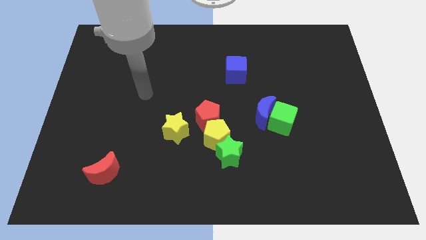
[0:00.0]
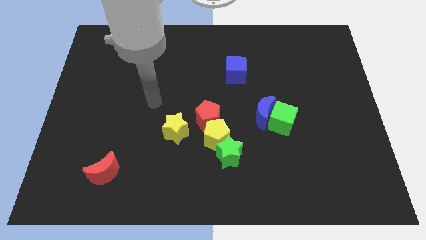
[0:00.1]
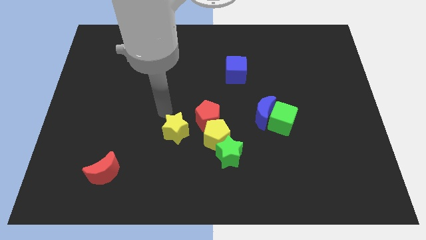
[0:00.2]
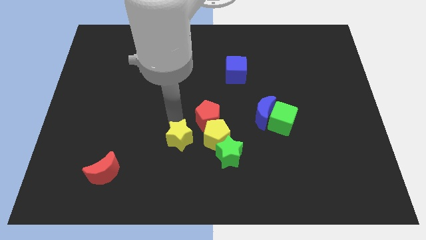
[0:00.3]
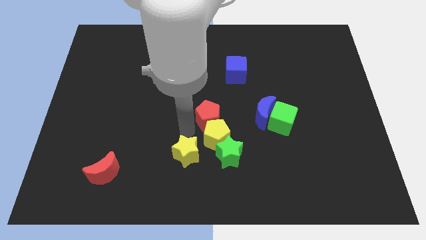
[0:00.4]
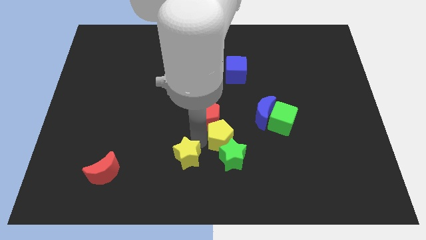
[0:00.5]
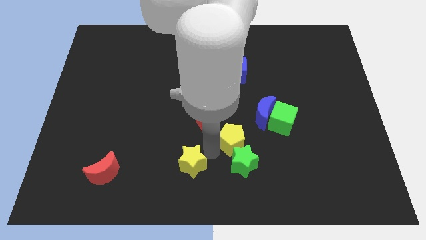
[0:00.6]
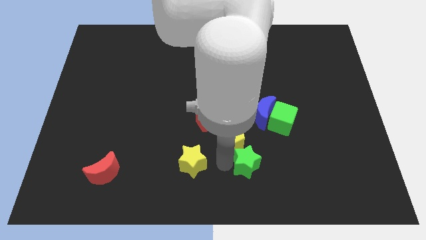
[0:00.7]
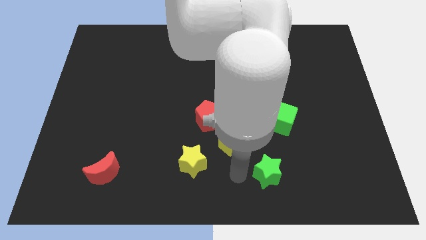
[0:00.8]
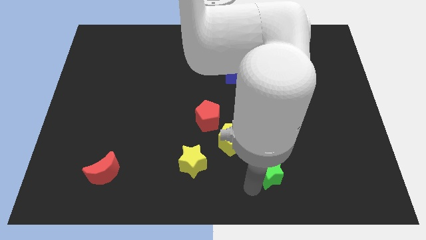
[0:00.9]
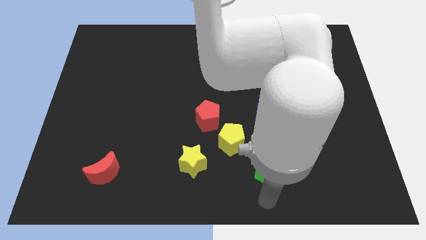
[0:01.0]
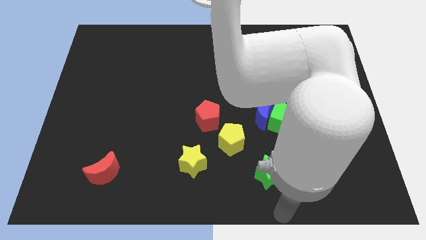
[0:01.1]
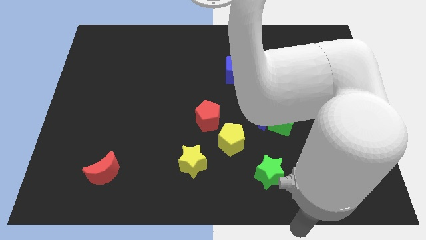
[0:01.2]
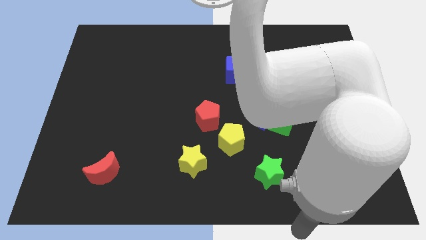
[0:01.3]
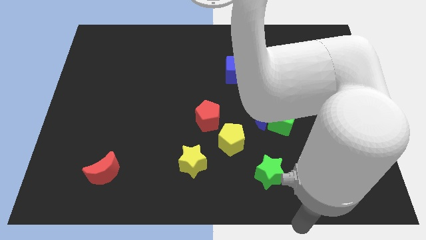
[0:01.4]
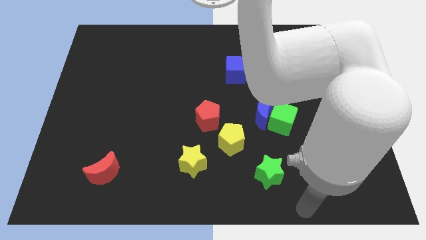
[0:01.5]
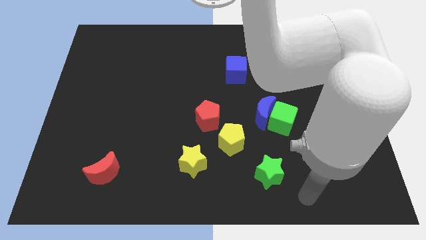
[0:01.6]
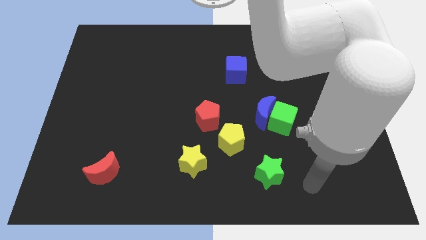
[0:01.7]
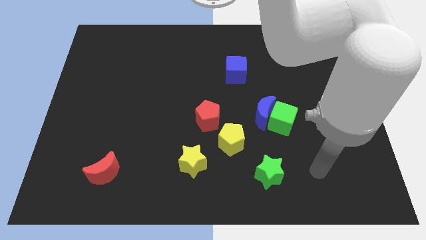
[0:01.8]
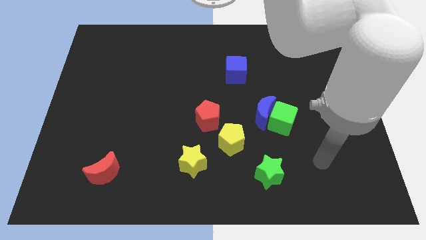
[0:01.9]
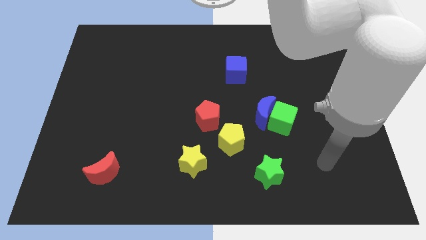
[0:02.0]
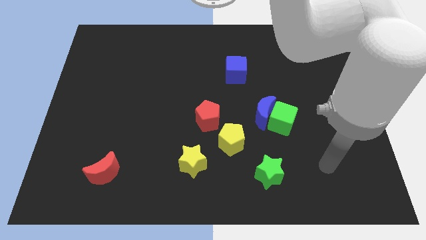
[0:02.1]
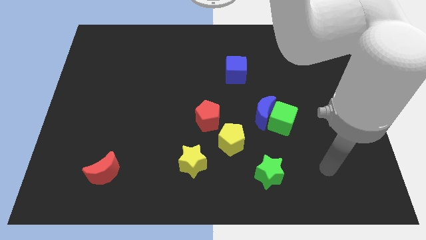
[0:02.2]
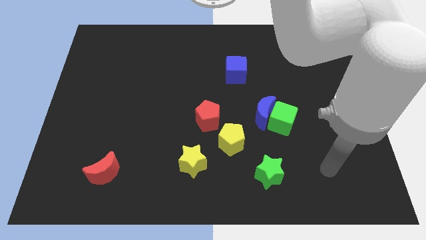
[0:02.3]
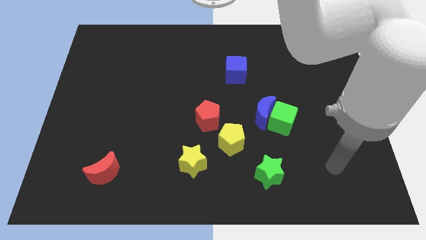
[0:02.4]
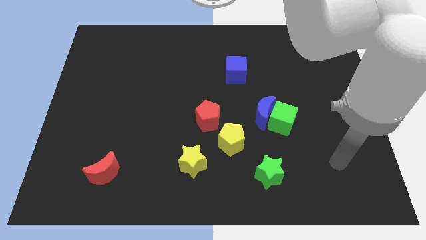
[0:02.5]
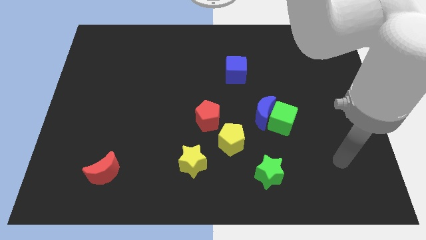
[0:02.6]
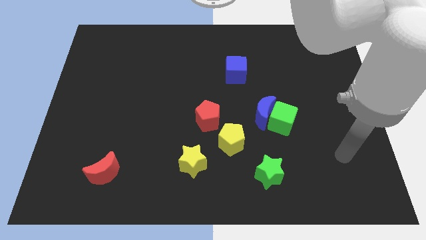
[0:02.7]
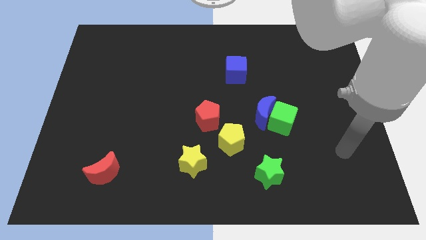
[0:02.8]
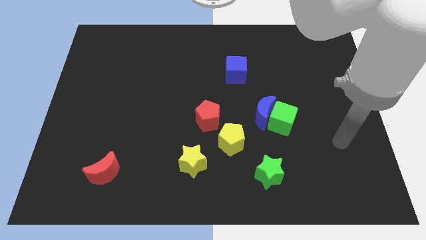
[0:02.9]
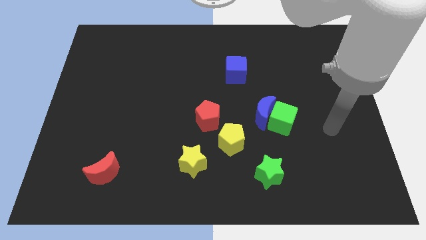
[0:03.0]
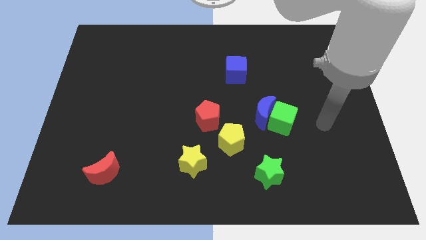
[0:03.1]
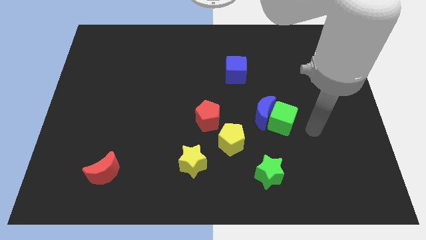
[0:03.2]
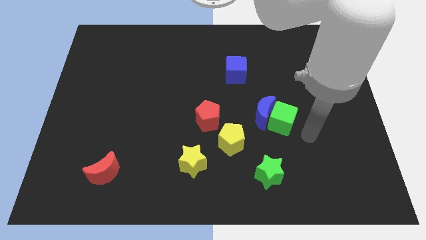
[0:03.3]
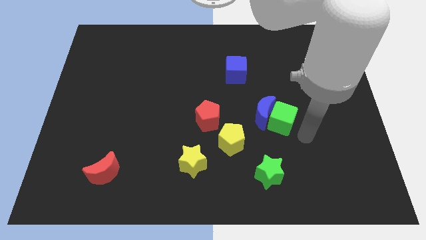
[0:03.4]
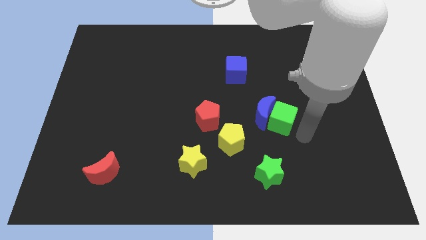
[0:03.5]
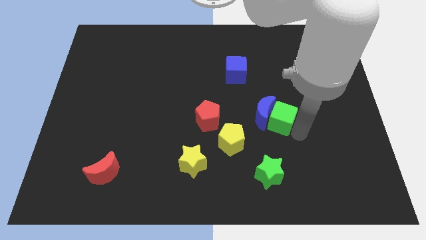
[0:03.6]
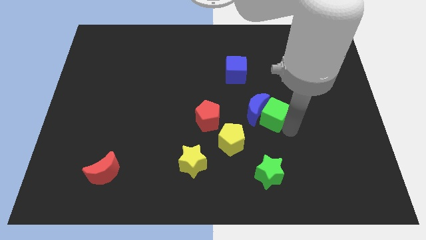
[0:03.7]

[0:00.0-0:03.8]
push the green cube and blue crescent to the top of the green star

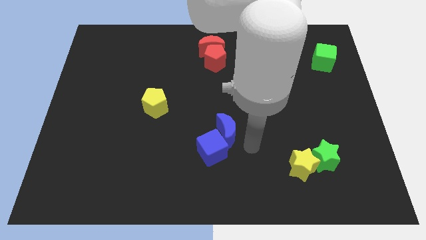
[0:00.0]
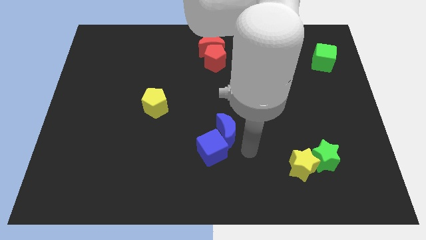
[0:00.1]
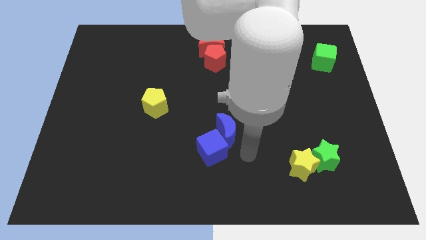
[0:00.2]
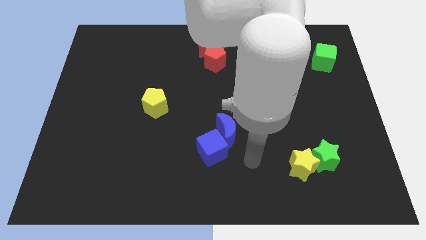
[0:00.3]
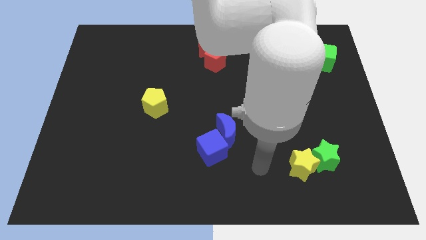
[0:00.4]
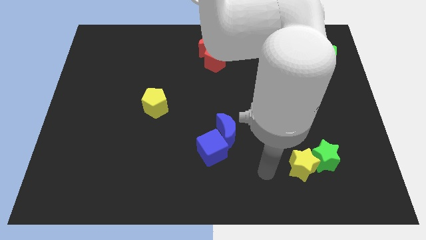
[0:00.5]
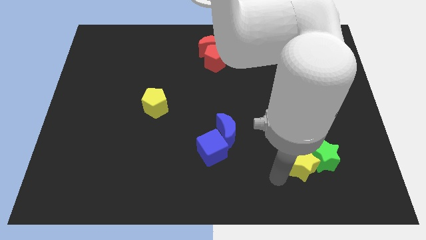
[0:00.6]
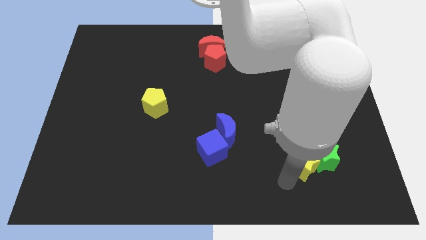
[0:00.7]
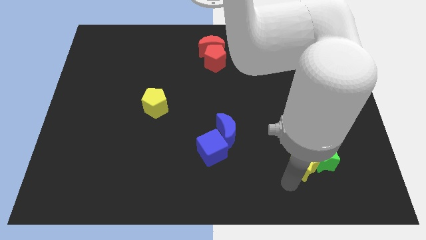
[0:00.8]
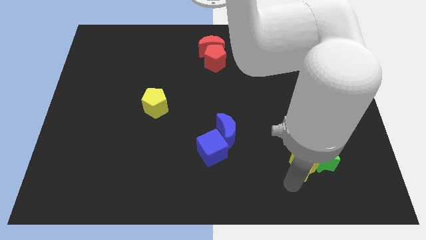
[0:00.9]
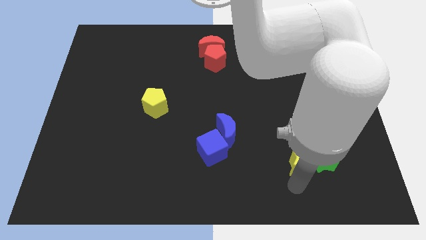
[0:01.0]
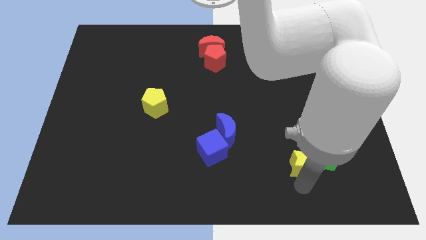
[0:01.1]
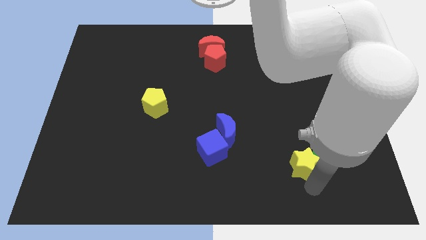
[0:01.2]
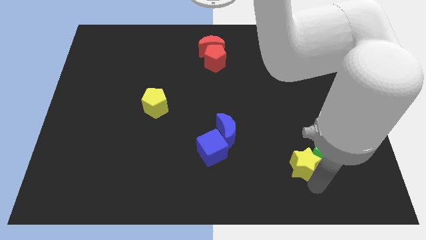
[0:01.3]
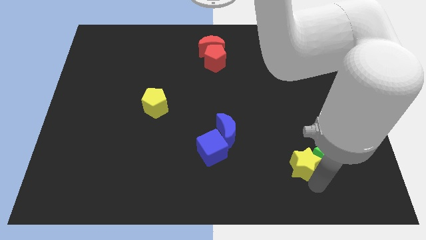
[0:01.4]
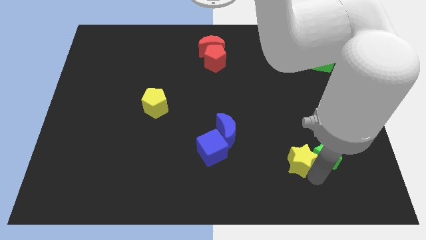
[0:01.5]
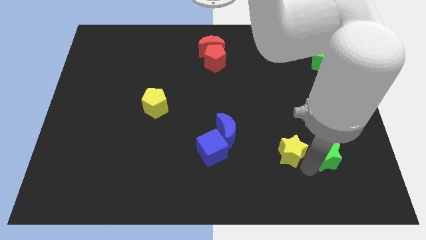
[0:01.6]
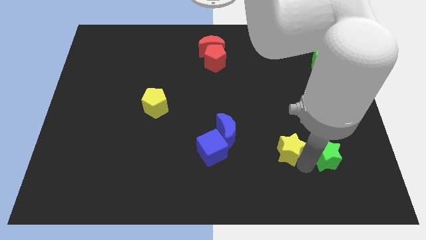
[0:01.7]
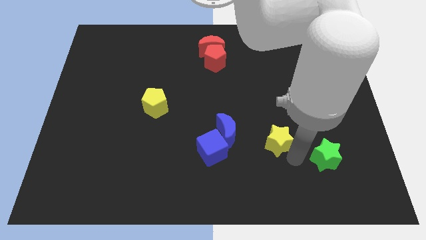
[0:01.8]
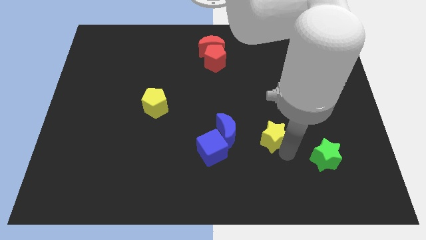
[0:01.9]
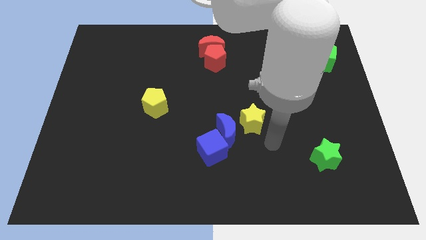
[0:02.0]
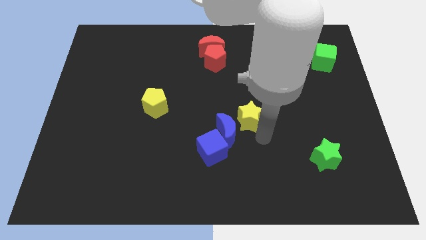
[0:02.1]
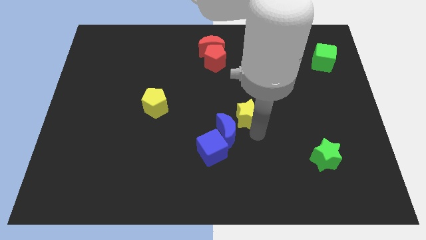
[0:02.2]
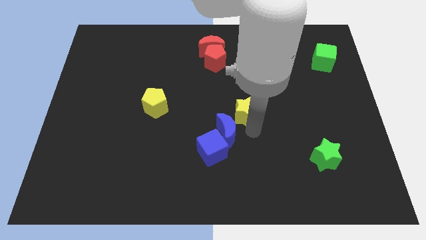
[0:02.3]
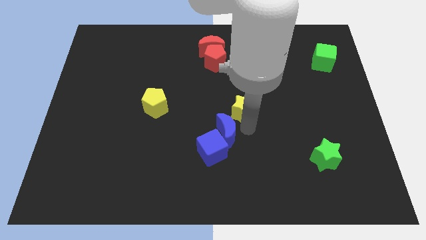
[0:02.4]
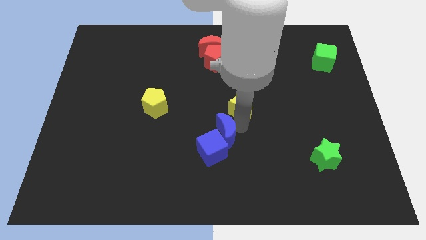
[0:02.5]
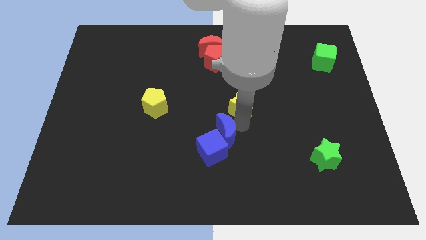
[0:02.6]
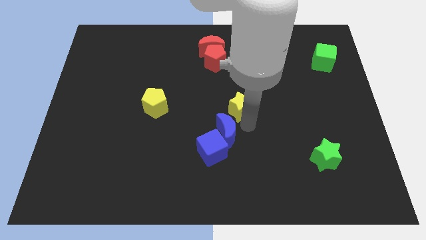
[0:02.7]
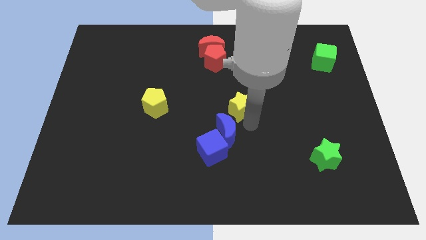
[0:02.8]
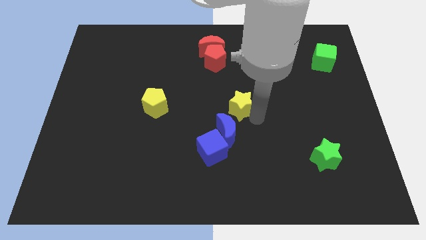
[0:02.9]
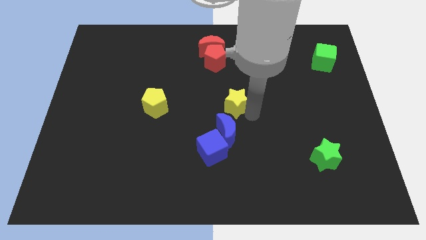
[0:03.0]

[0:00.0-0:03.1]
separate yellow star from green star

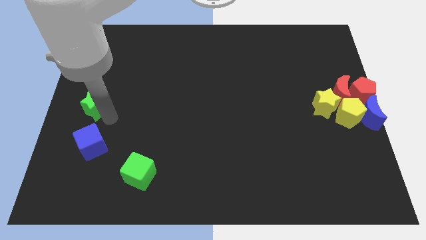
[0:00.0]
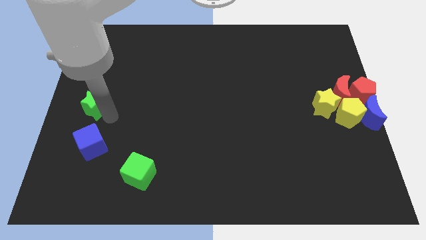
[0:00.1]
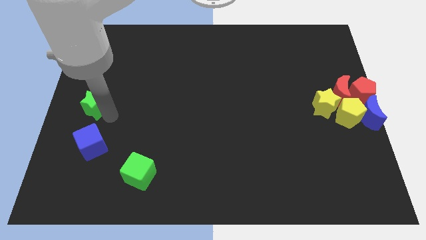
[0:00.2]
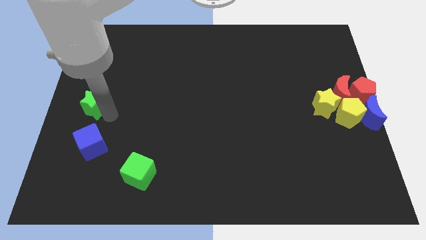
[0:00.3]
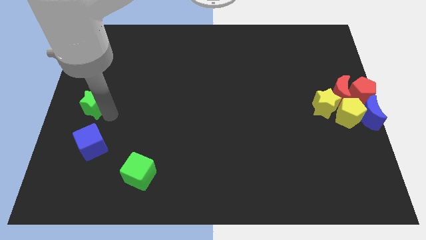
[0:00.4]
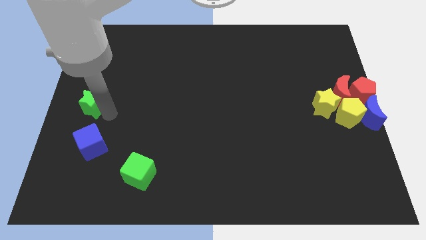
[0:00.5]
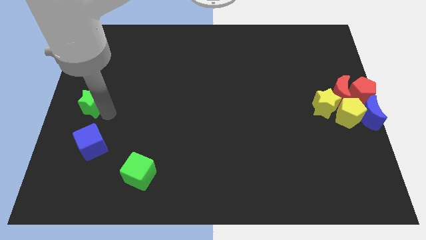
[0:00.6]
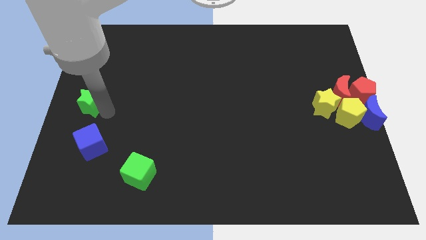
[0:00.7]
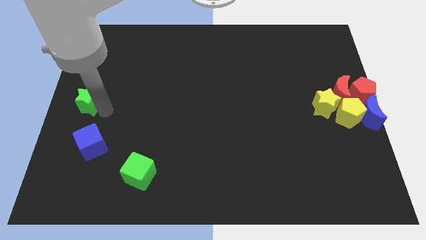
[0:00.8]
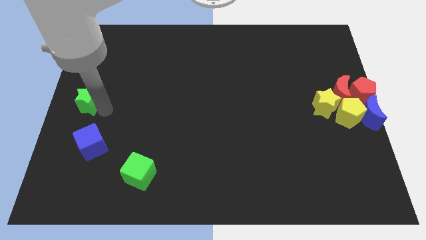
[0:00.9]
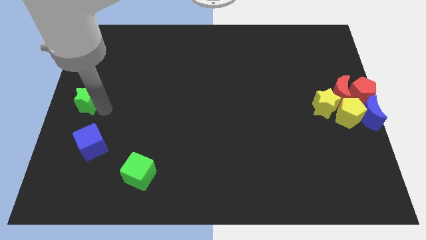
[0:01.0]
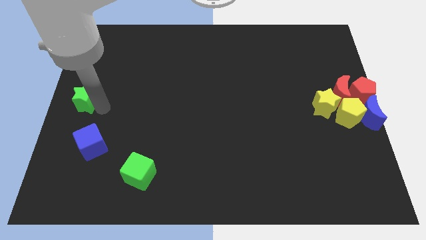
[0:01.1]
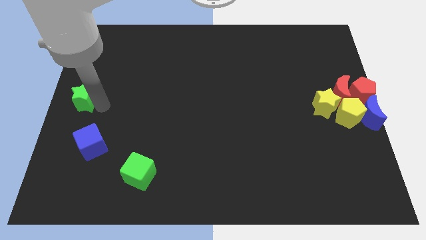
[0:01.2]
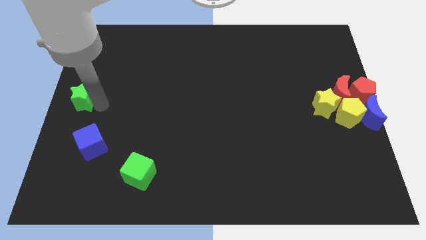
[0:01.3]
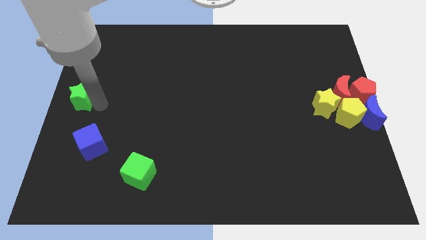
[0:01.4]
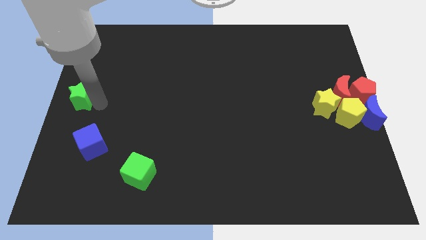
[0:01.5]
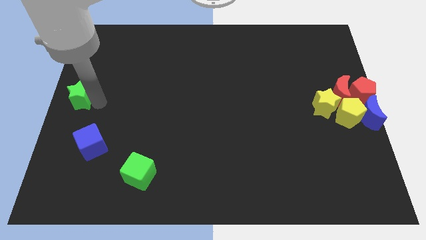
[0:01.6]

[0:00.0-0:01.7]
move the green star to the left middle side of the board

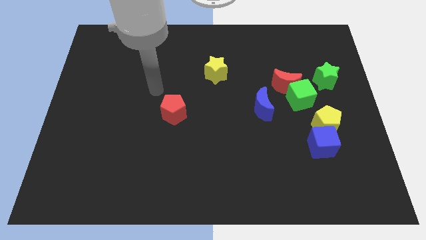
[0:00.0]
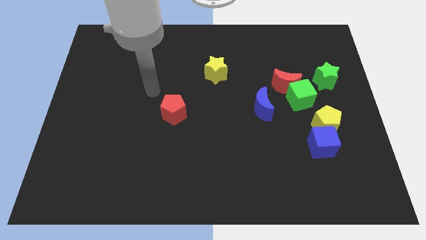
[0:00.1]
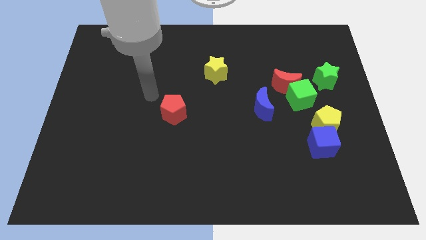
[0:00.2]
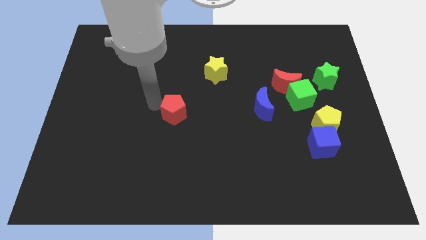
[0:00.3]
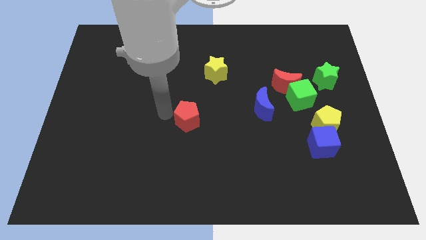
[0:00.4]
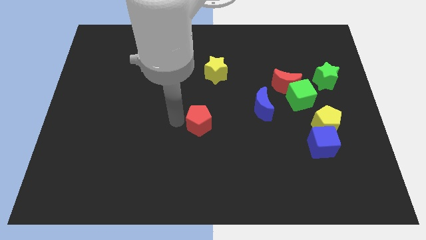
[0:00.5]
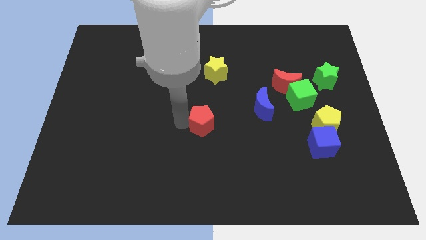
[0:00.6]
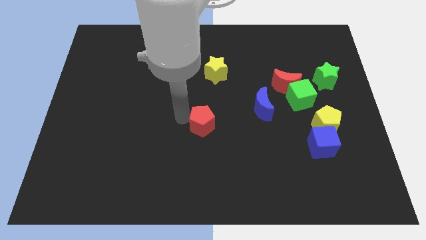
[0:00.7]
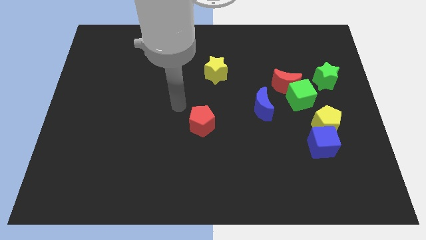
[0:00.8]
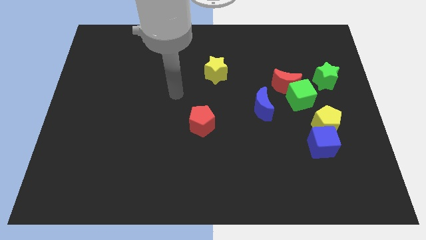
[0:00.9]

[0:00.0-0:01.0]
move the red pentagon to the bottom left diagonal of the yellow star
